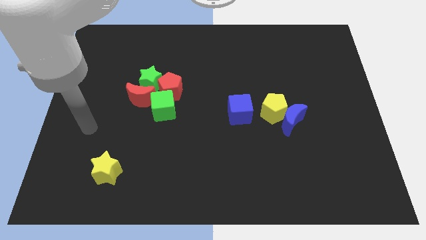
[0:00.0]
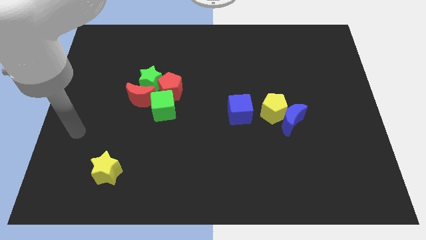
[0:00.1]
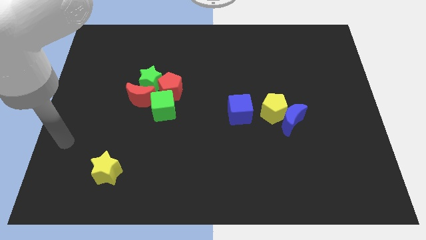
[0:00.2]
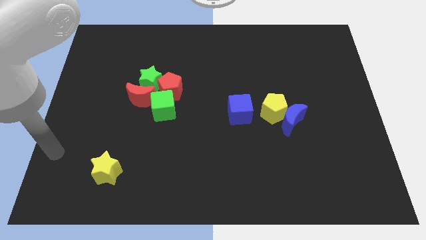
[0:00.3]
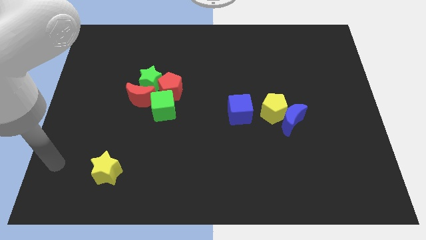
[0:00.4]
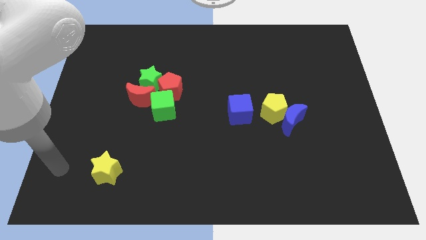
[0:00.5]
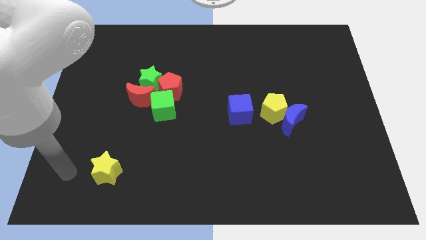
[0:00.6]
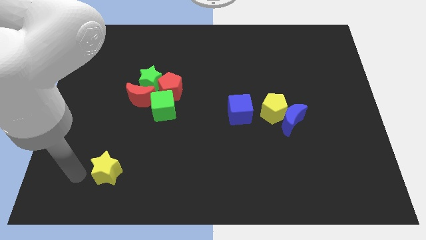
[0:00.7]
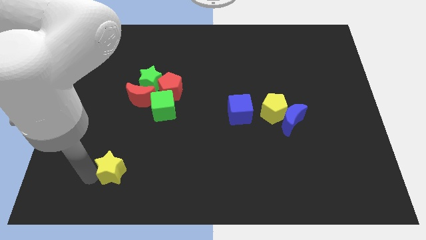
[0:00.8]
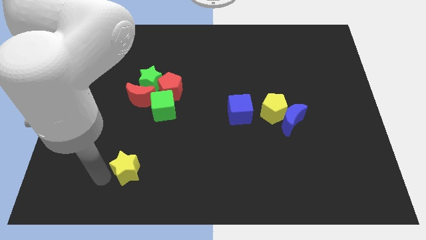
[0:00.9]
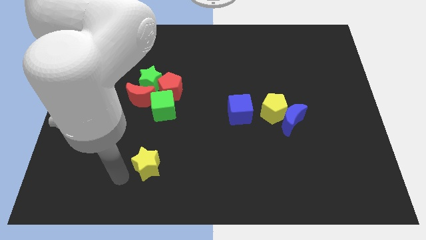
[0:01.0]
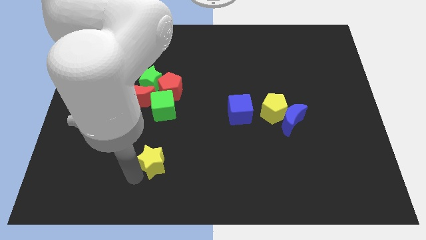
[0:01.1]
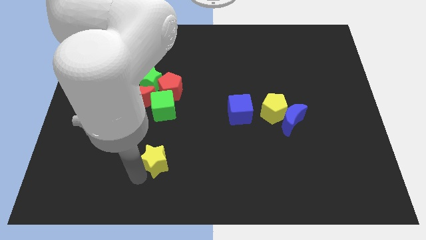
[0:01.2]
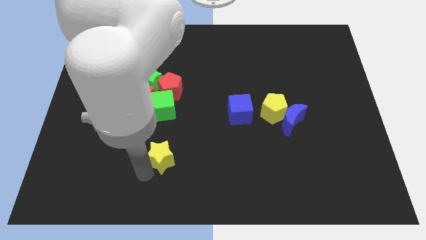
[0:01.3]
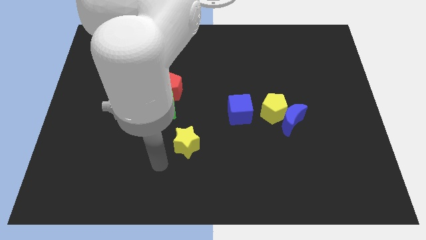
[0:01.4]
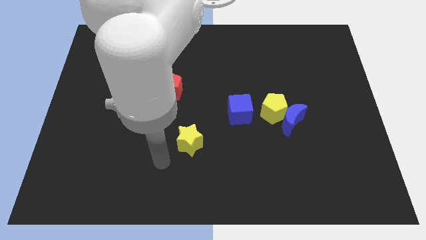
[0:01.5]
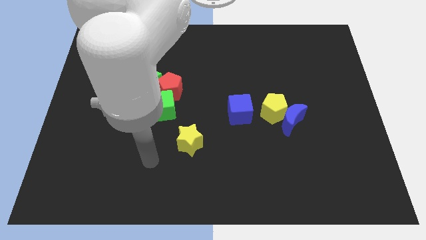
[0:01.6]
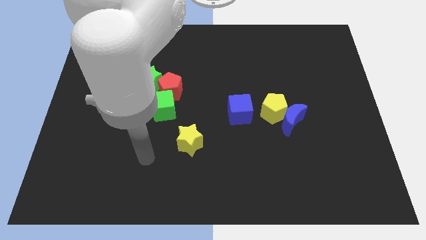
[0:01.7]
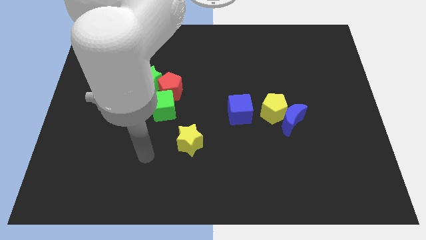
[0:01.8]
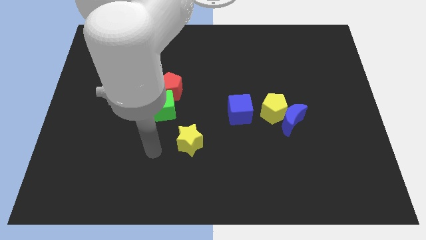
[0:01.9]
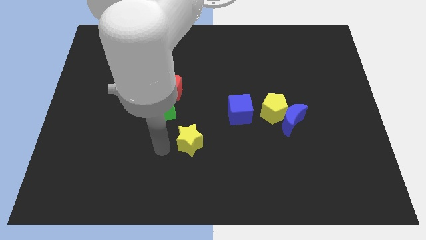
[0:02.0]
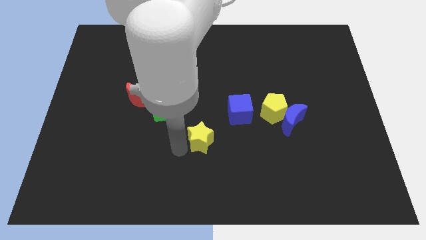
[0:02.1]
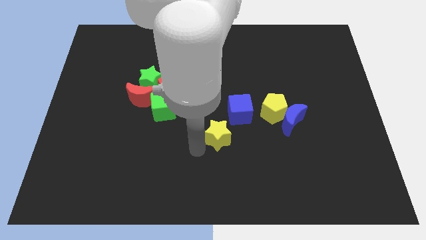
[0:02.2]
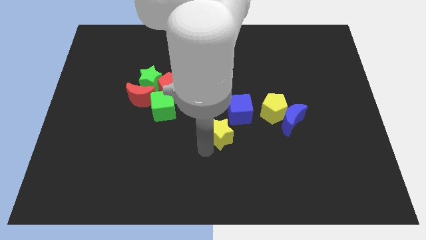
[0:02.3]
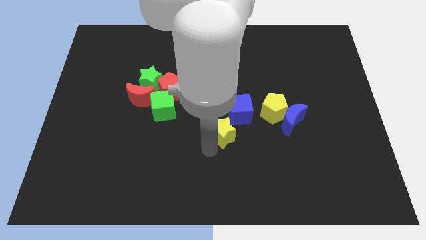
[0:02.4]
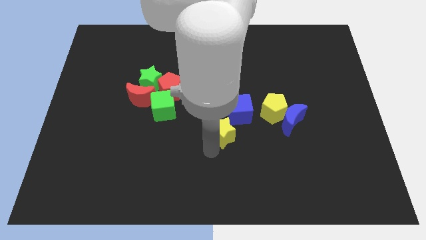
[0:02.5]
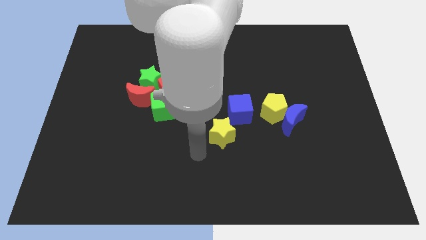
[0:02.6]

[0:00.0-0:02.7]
place the yellow star slightly back to the blue cube

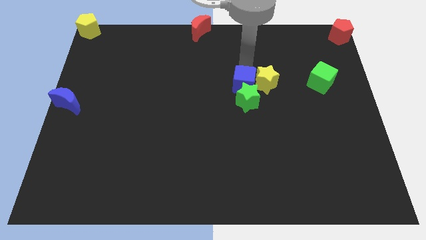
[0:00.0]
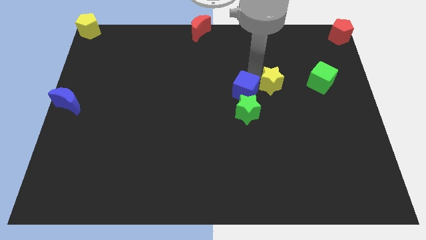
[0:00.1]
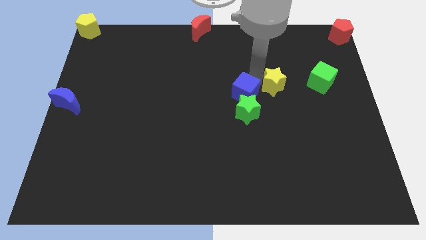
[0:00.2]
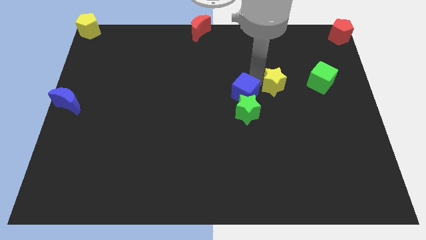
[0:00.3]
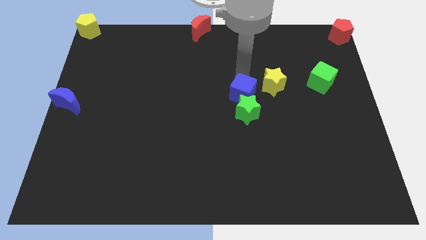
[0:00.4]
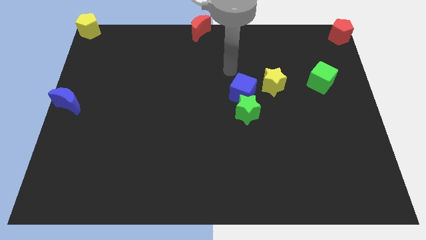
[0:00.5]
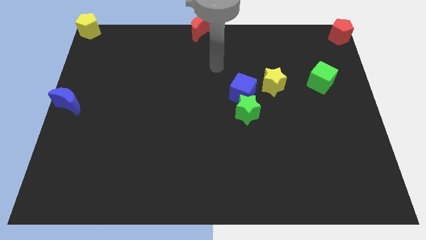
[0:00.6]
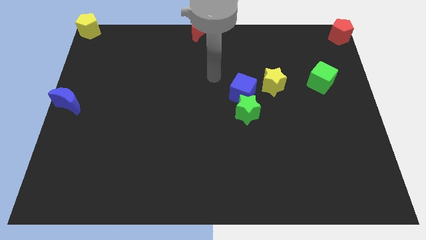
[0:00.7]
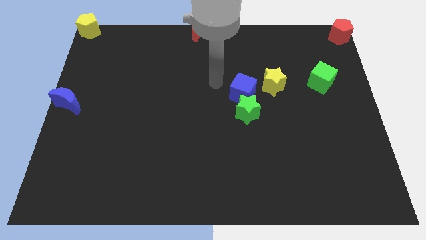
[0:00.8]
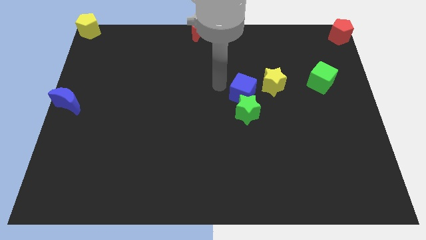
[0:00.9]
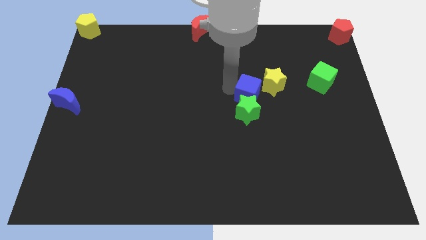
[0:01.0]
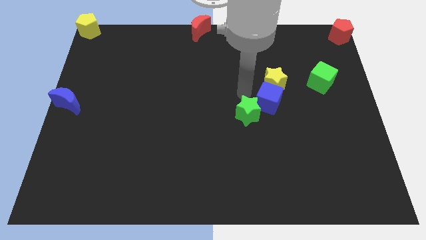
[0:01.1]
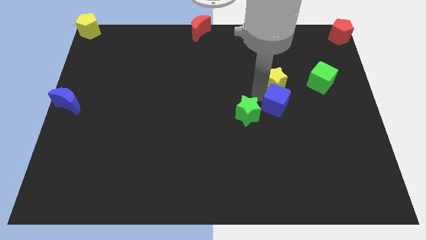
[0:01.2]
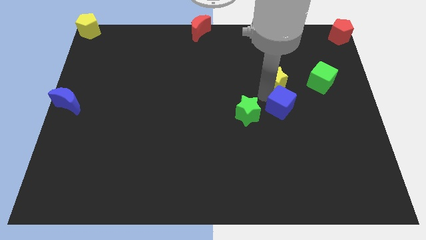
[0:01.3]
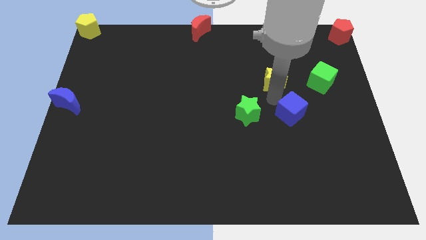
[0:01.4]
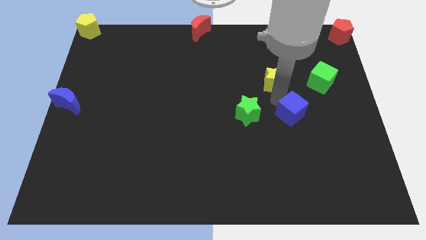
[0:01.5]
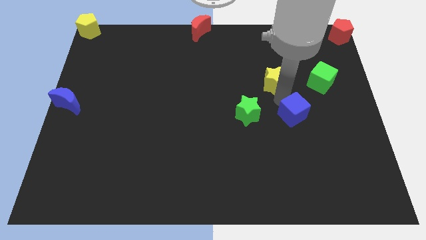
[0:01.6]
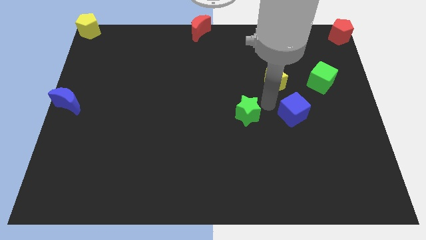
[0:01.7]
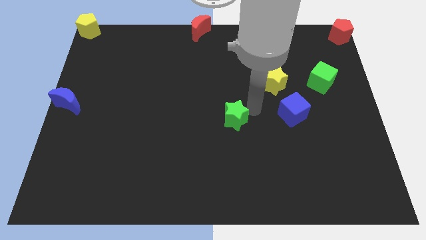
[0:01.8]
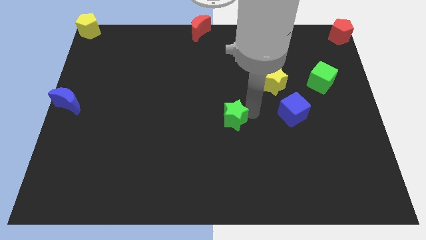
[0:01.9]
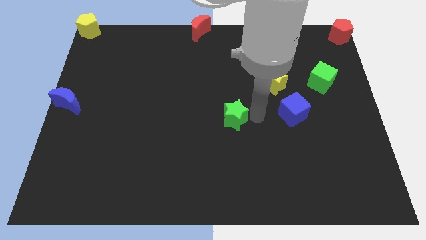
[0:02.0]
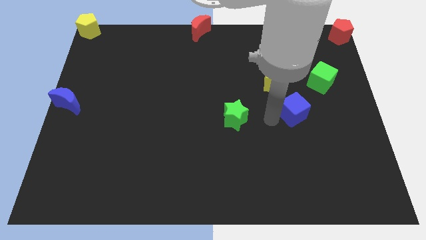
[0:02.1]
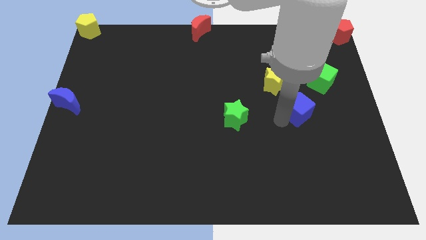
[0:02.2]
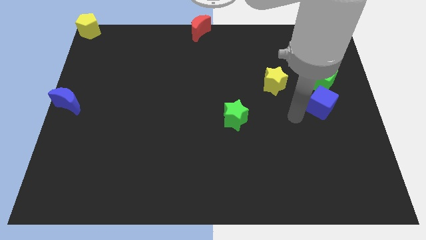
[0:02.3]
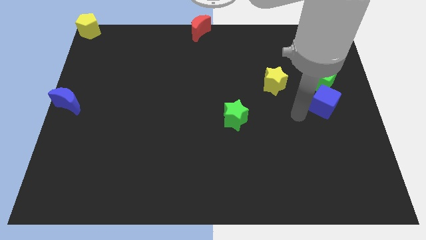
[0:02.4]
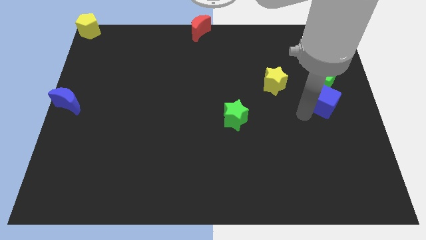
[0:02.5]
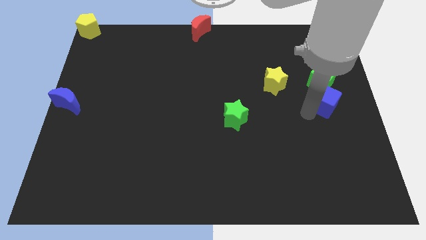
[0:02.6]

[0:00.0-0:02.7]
place blue cube below green cube

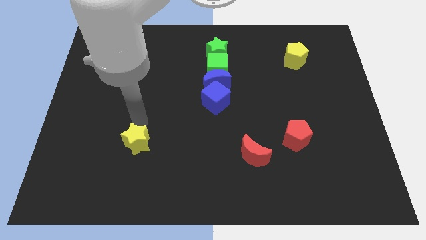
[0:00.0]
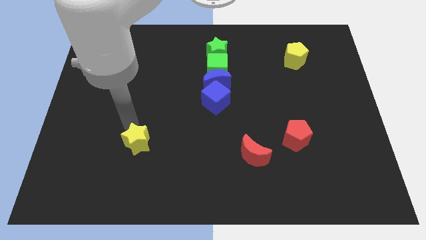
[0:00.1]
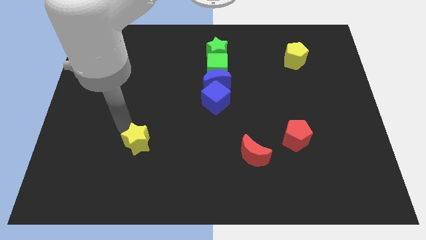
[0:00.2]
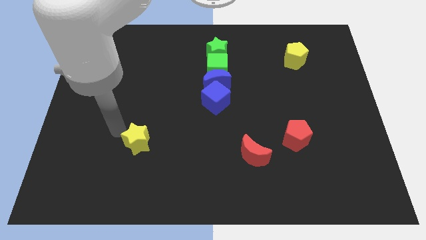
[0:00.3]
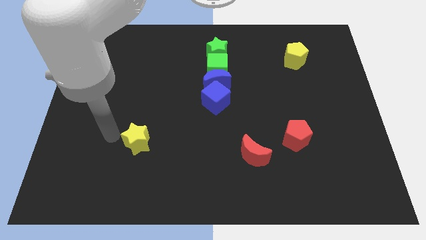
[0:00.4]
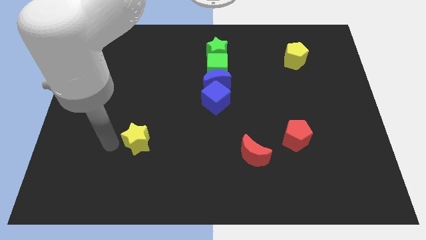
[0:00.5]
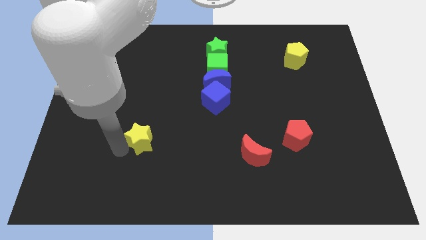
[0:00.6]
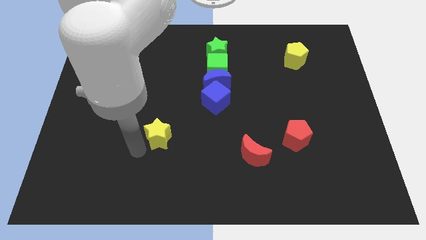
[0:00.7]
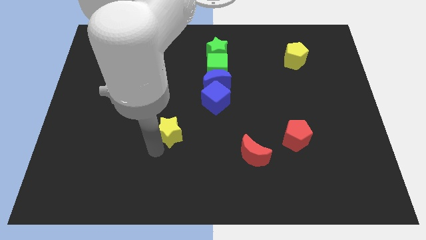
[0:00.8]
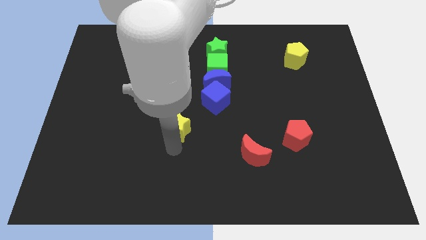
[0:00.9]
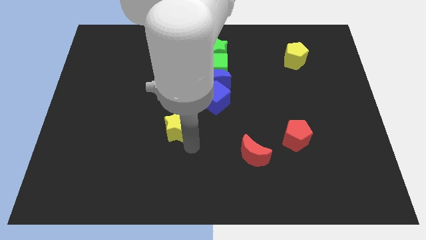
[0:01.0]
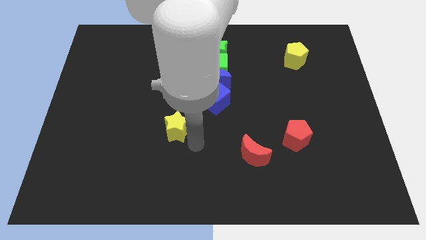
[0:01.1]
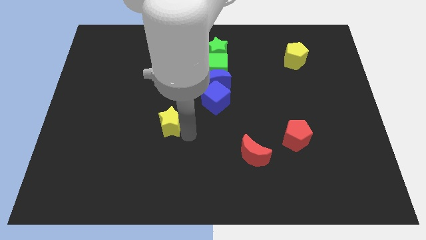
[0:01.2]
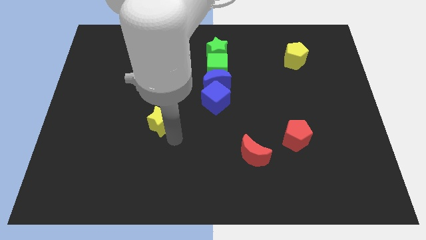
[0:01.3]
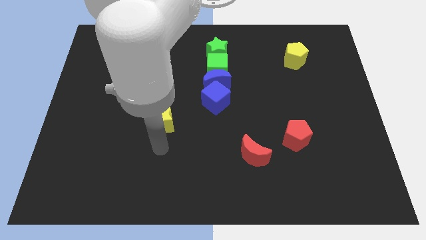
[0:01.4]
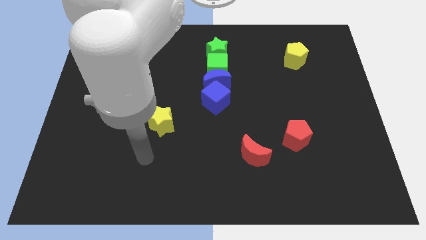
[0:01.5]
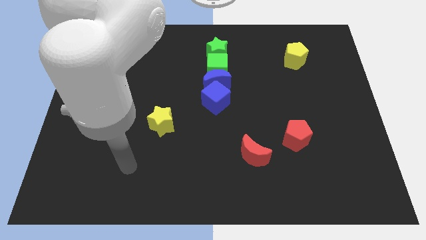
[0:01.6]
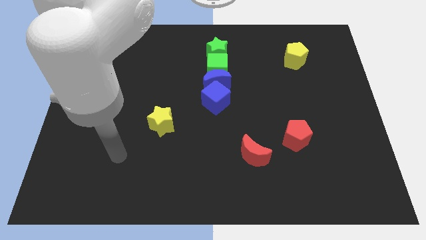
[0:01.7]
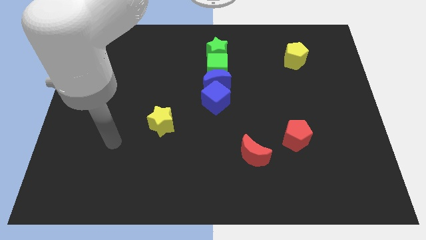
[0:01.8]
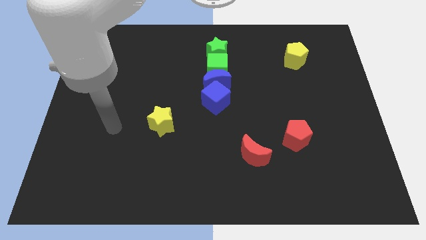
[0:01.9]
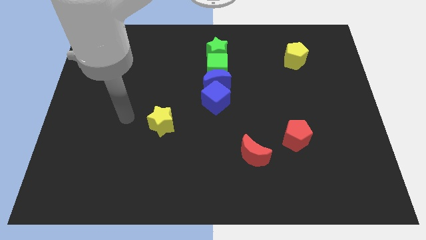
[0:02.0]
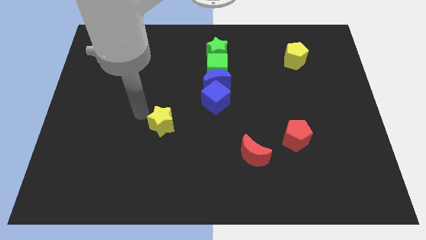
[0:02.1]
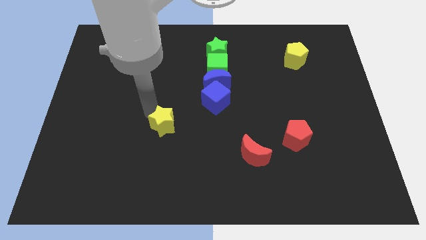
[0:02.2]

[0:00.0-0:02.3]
place the yellow star diagonally towards blue cube

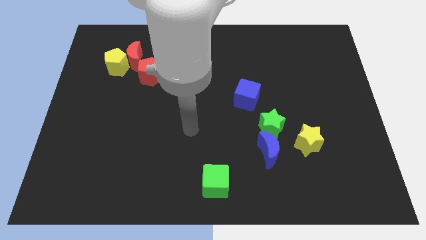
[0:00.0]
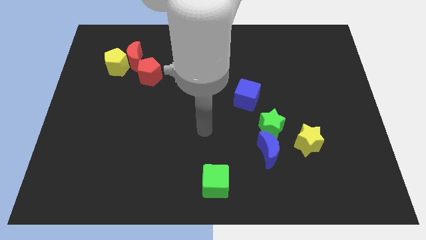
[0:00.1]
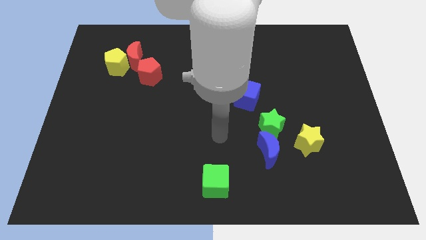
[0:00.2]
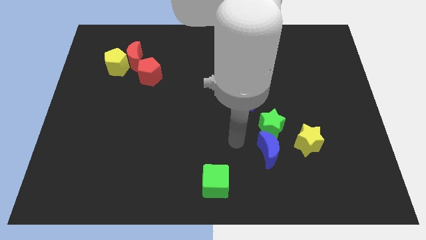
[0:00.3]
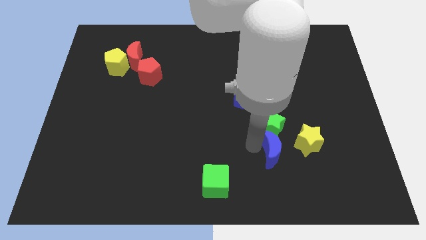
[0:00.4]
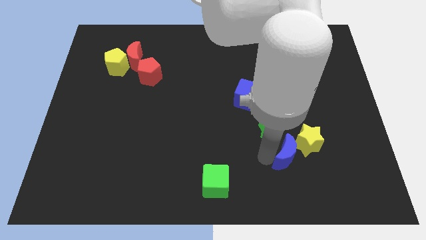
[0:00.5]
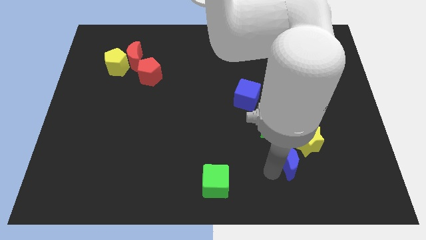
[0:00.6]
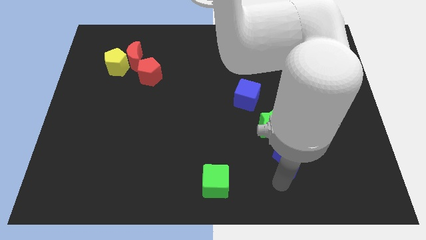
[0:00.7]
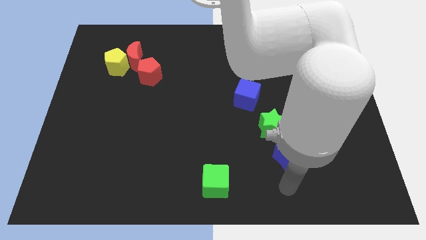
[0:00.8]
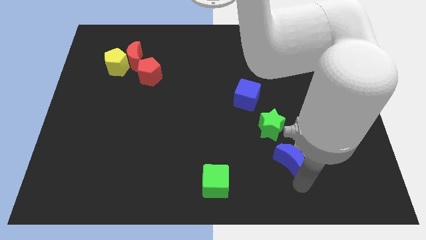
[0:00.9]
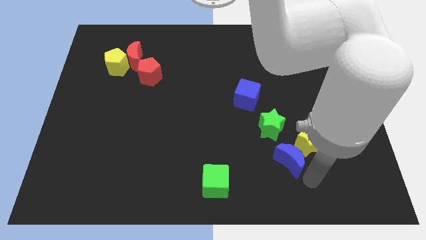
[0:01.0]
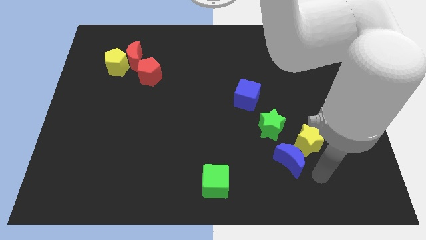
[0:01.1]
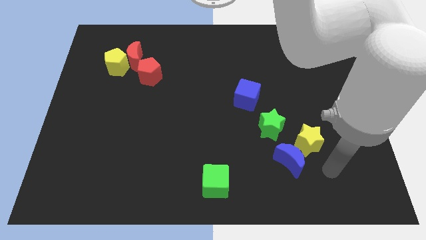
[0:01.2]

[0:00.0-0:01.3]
move the blue moon diagonally bottom right to the green star
